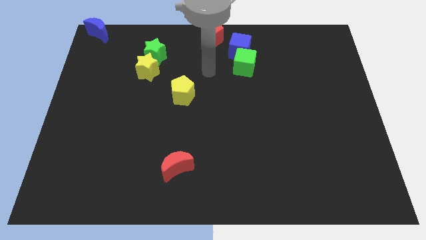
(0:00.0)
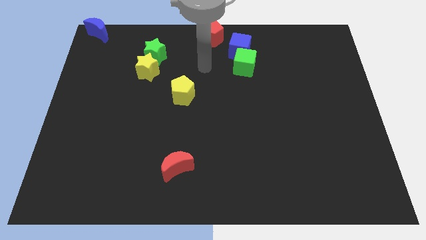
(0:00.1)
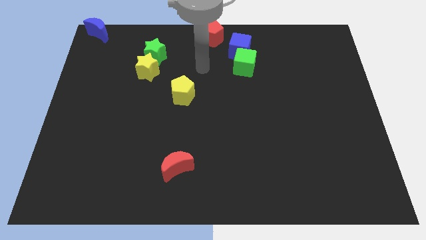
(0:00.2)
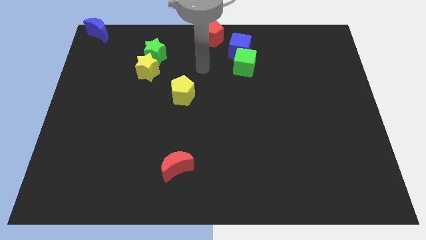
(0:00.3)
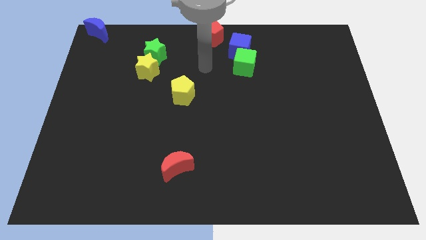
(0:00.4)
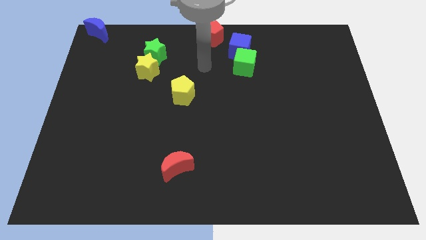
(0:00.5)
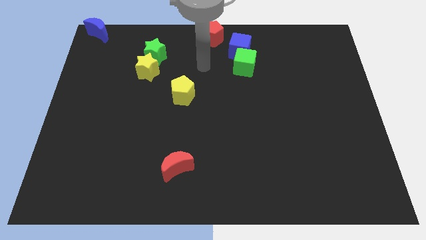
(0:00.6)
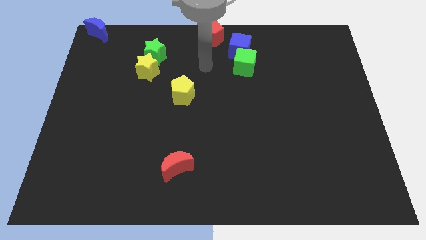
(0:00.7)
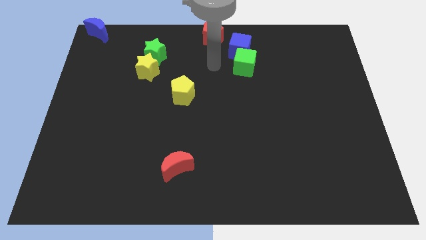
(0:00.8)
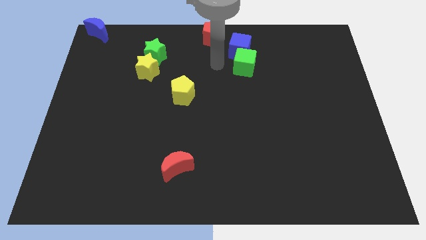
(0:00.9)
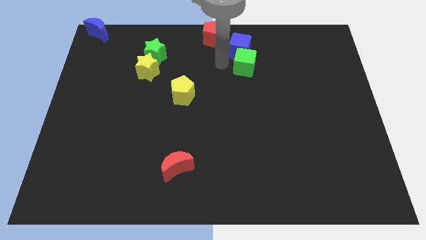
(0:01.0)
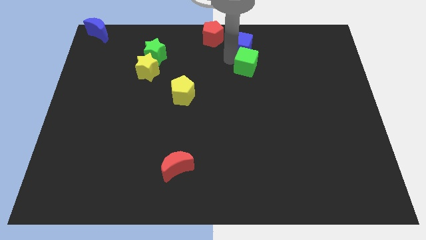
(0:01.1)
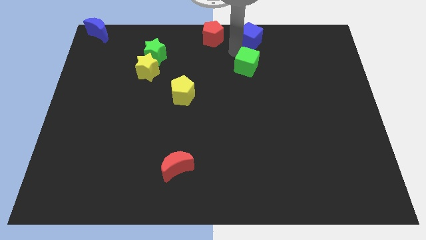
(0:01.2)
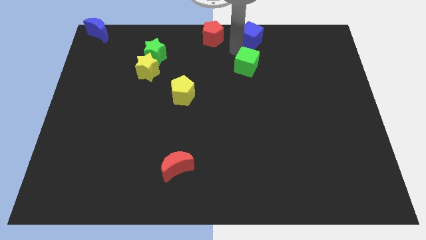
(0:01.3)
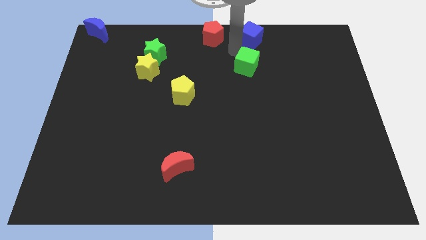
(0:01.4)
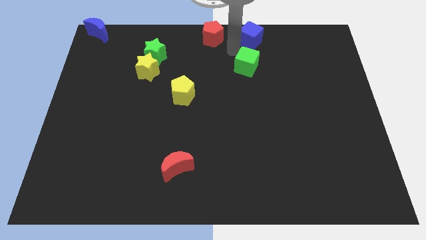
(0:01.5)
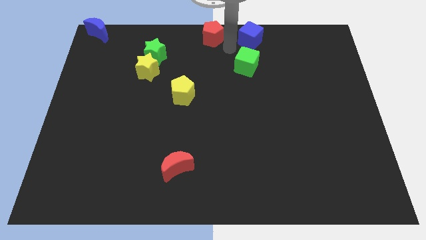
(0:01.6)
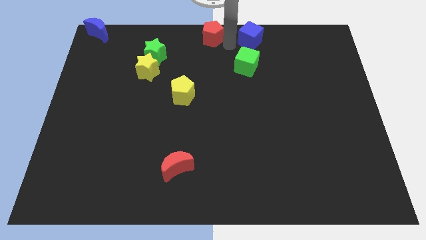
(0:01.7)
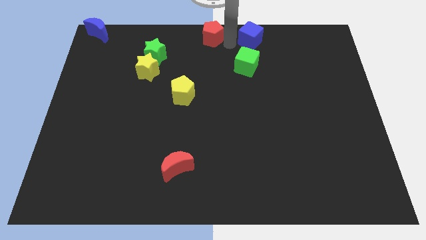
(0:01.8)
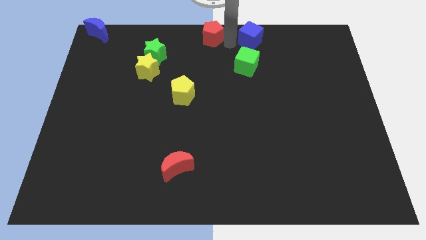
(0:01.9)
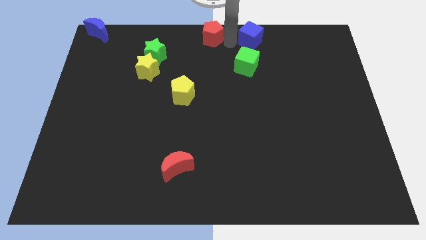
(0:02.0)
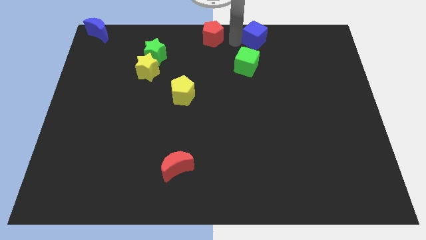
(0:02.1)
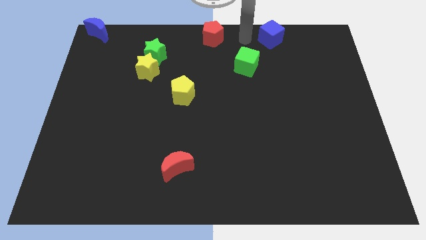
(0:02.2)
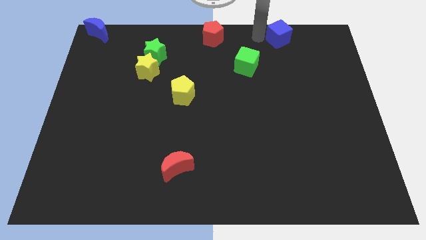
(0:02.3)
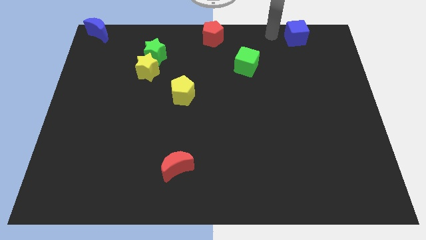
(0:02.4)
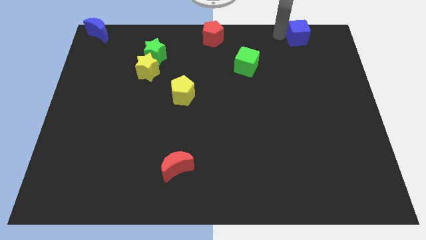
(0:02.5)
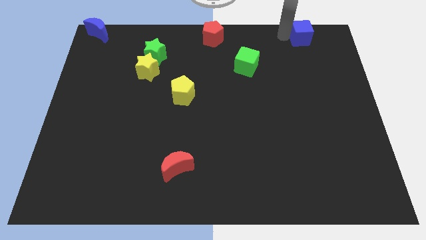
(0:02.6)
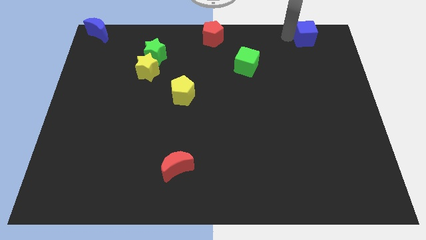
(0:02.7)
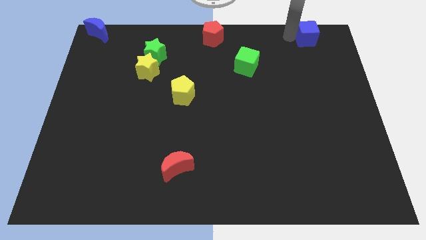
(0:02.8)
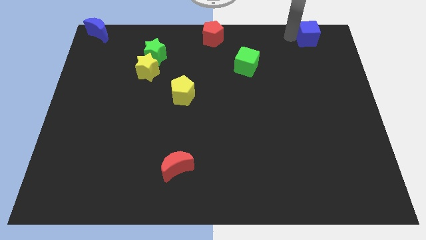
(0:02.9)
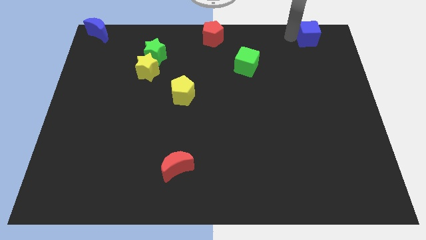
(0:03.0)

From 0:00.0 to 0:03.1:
separate the blue cube from the green cube

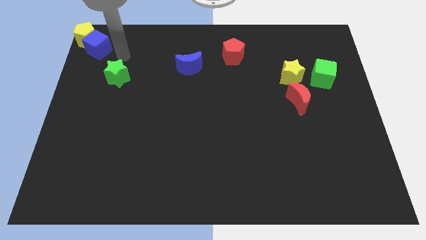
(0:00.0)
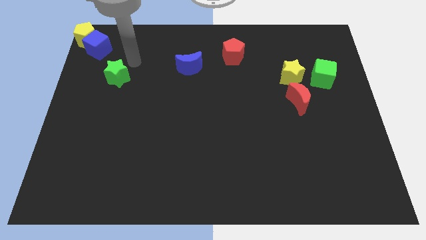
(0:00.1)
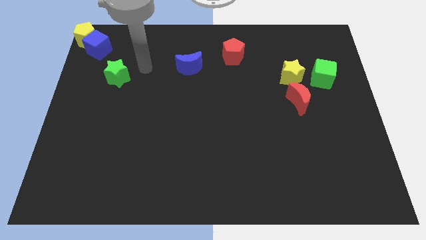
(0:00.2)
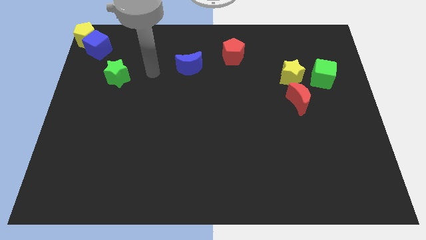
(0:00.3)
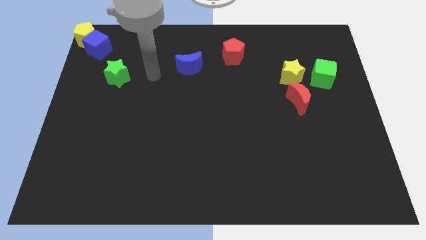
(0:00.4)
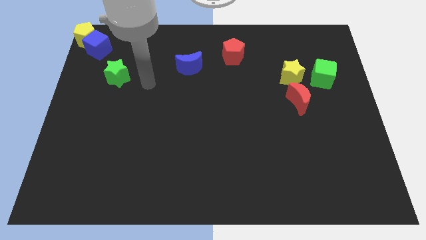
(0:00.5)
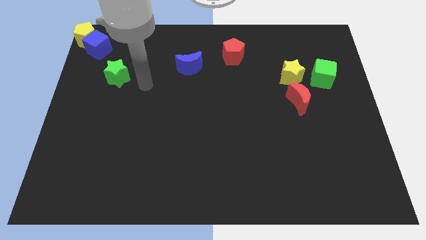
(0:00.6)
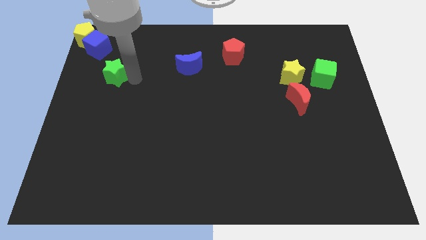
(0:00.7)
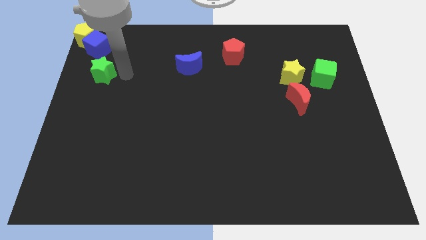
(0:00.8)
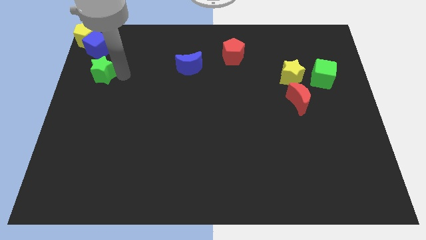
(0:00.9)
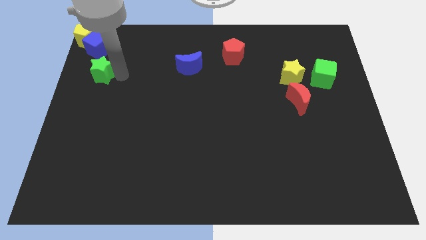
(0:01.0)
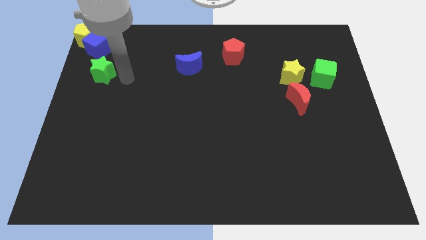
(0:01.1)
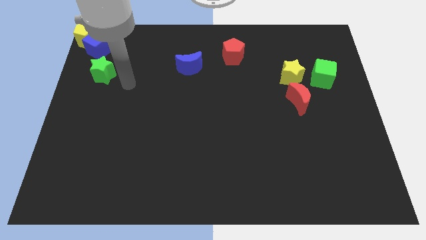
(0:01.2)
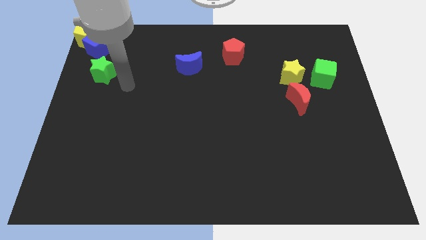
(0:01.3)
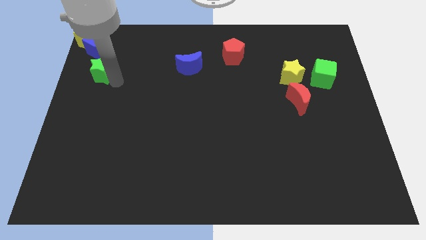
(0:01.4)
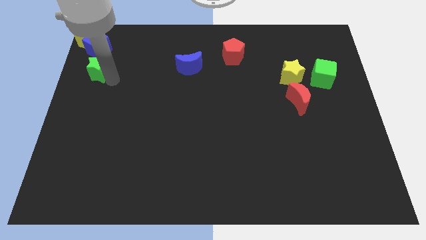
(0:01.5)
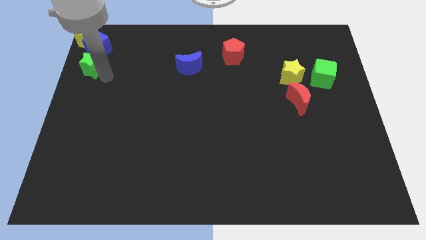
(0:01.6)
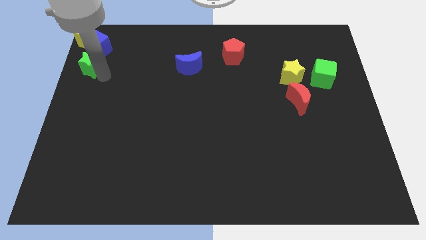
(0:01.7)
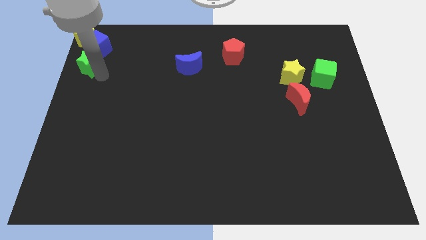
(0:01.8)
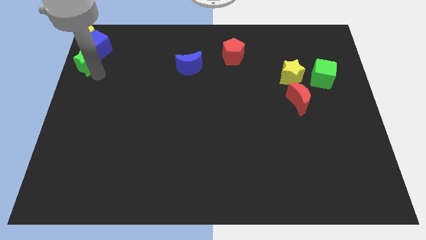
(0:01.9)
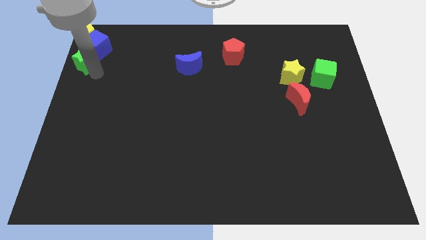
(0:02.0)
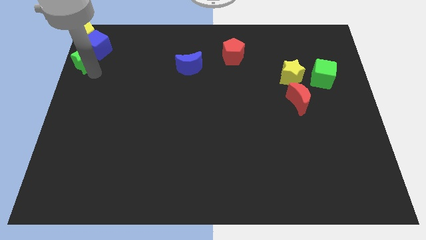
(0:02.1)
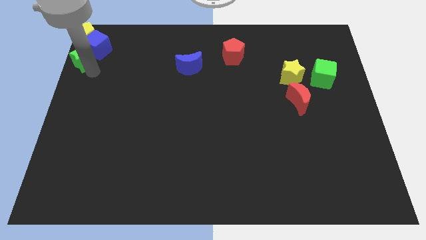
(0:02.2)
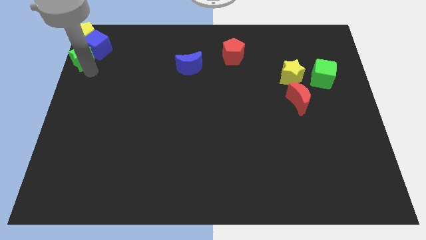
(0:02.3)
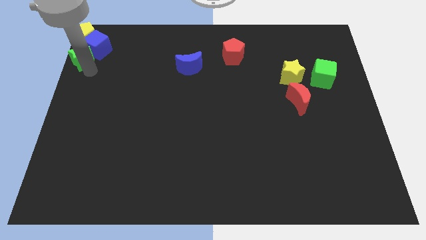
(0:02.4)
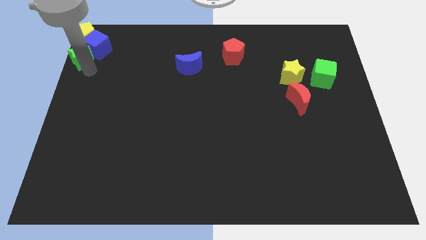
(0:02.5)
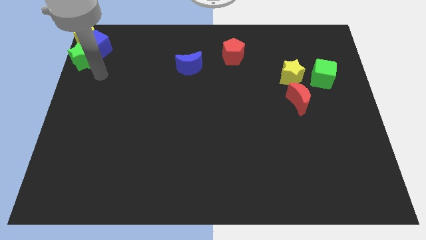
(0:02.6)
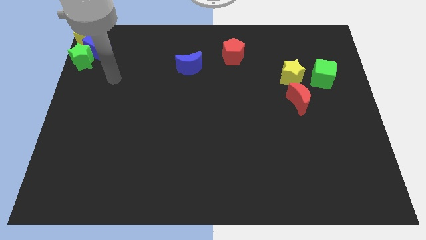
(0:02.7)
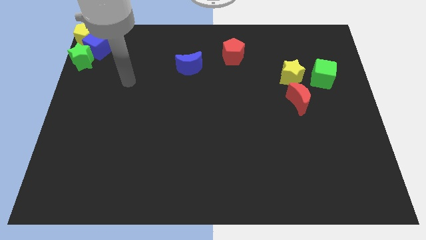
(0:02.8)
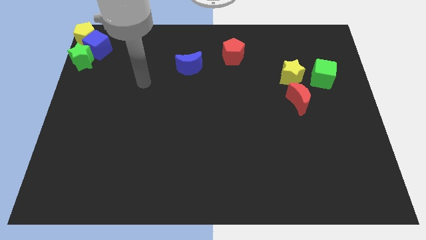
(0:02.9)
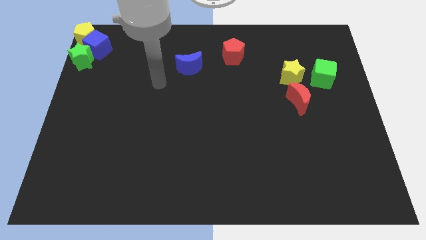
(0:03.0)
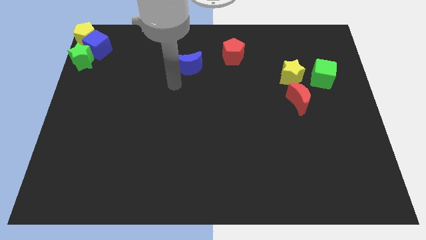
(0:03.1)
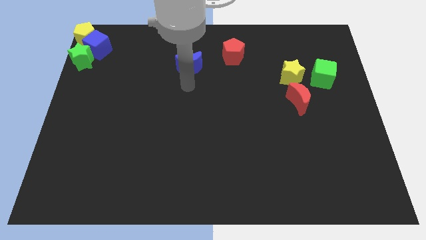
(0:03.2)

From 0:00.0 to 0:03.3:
place the green star left to the blue cube

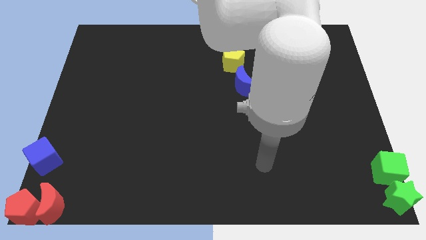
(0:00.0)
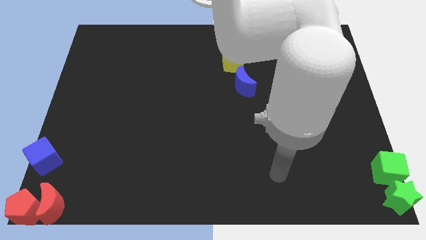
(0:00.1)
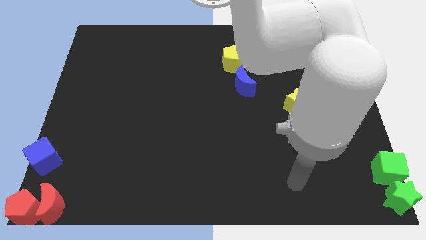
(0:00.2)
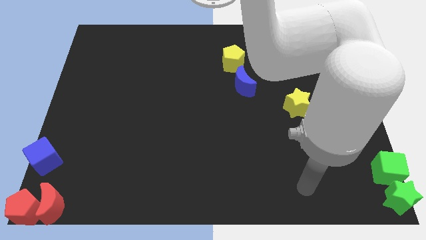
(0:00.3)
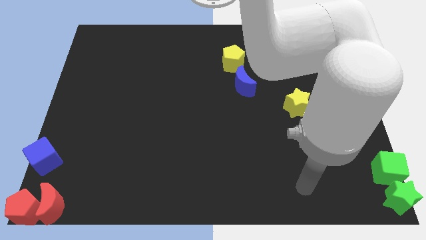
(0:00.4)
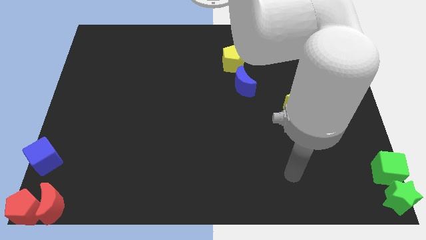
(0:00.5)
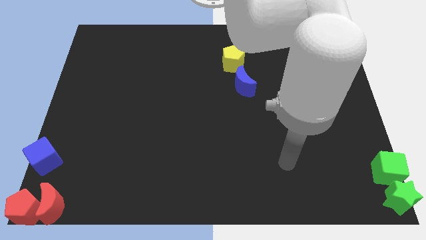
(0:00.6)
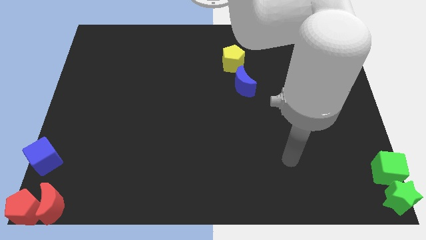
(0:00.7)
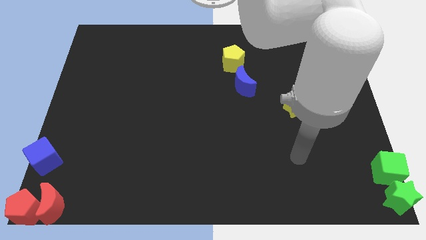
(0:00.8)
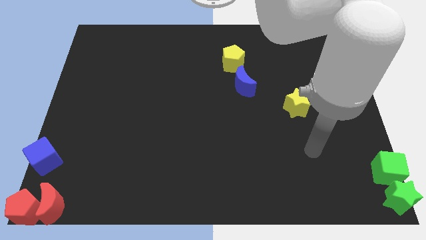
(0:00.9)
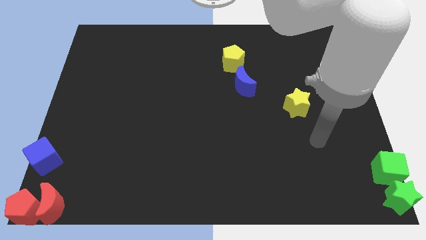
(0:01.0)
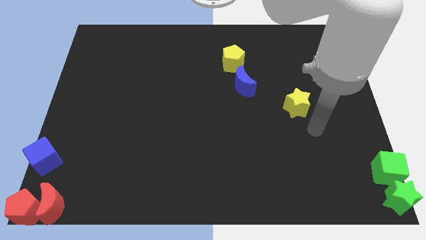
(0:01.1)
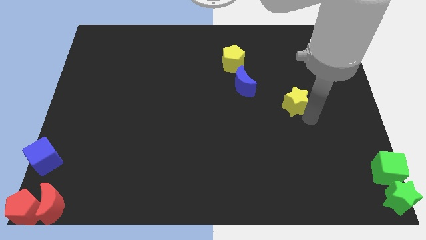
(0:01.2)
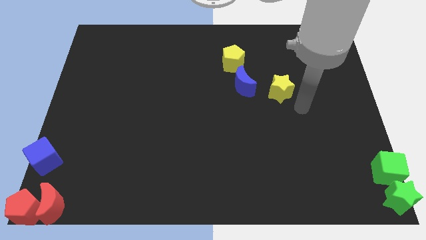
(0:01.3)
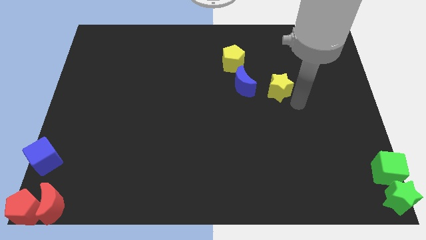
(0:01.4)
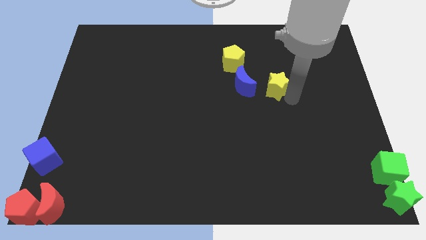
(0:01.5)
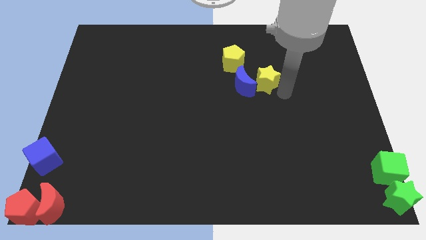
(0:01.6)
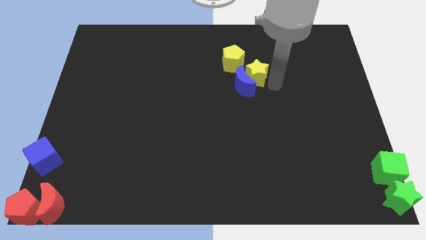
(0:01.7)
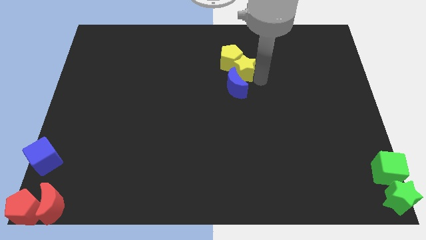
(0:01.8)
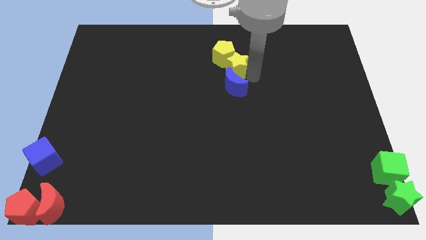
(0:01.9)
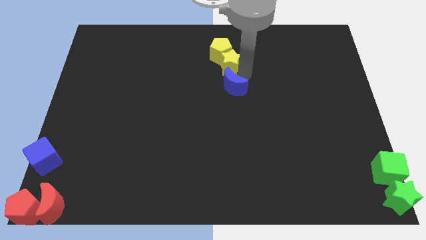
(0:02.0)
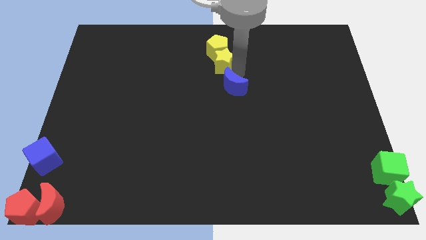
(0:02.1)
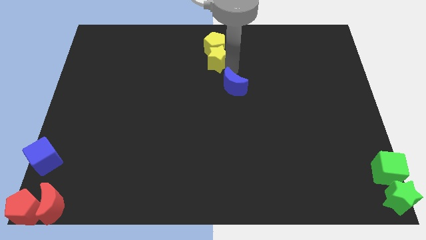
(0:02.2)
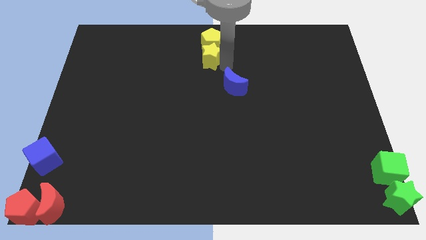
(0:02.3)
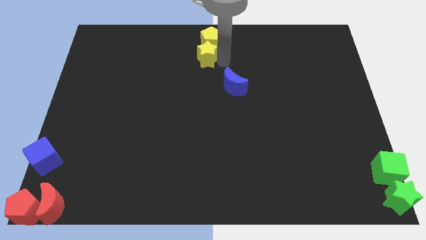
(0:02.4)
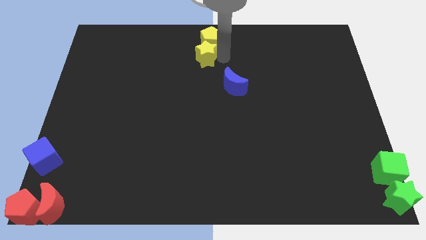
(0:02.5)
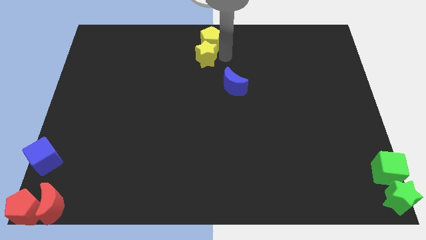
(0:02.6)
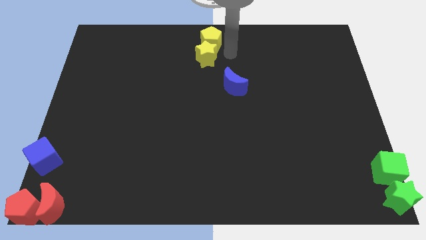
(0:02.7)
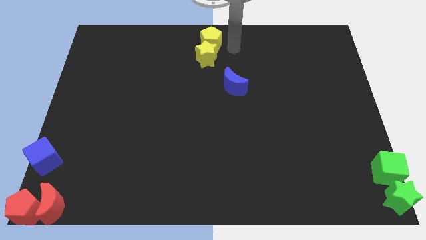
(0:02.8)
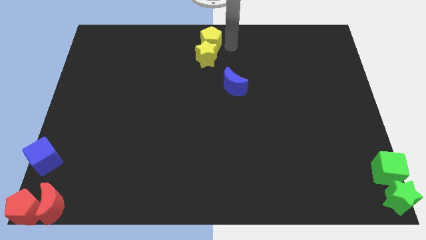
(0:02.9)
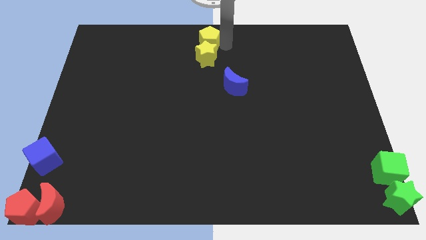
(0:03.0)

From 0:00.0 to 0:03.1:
push the yellow star into the yellow pentagon
